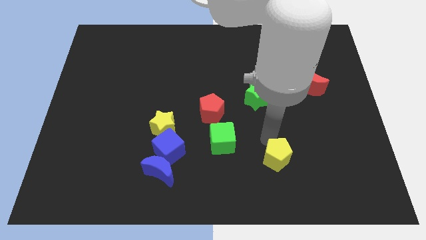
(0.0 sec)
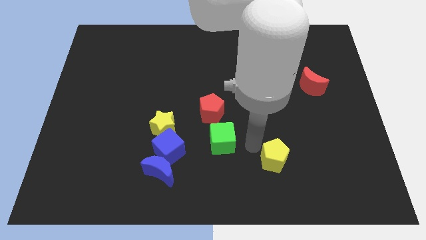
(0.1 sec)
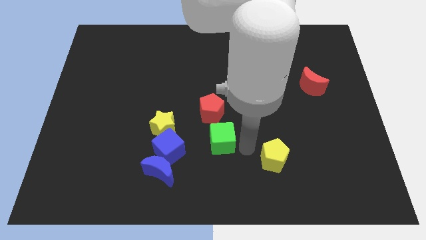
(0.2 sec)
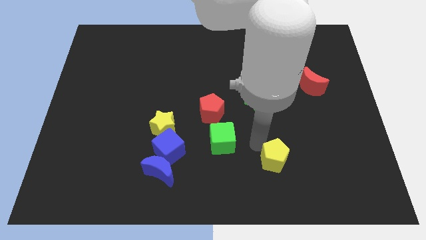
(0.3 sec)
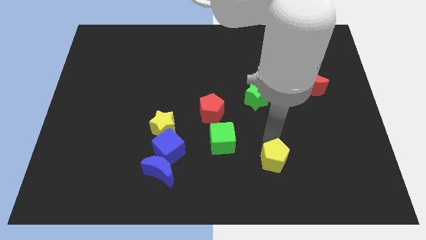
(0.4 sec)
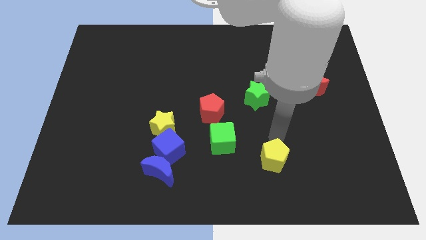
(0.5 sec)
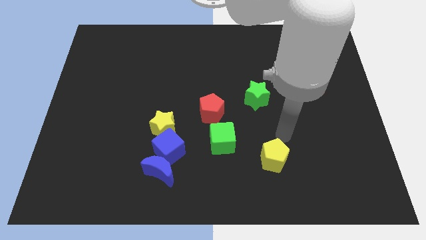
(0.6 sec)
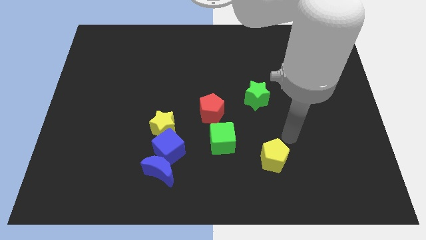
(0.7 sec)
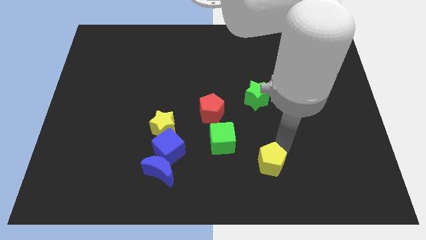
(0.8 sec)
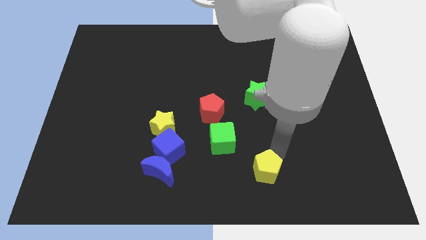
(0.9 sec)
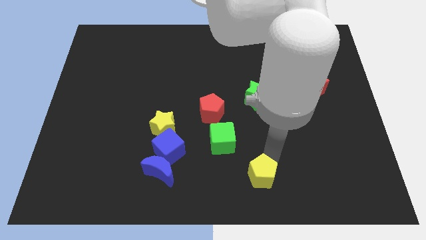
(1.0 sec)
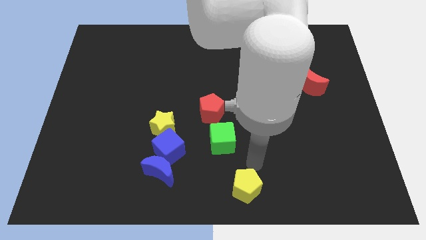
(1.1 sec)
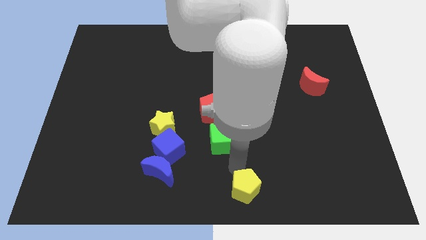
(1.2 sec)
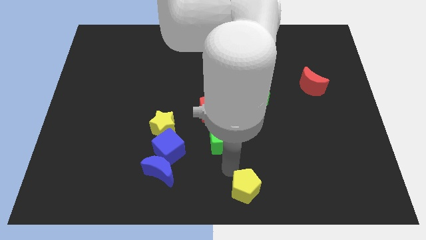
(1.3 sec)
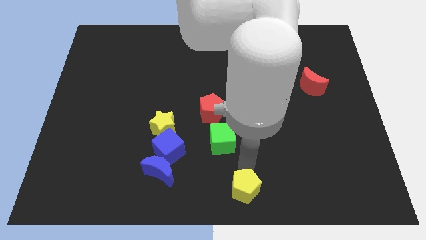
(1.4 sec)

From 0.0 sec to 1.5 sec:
push the yellow pentago to the bottom side of the green cube

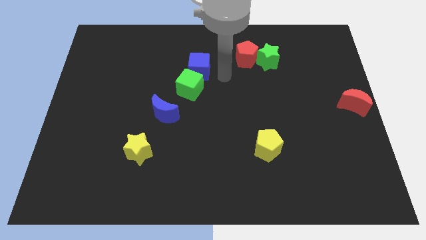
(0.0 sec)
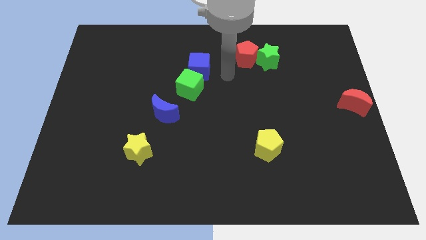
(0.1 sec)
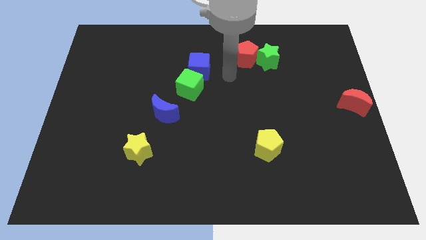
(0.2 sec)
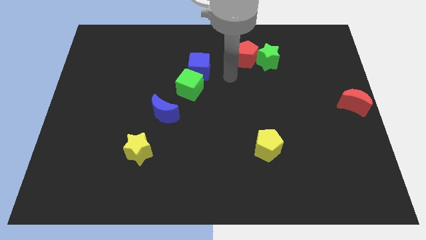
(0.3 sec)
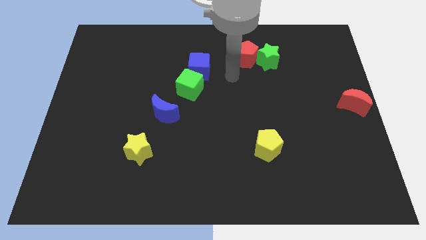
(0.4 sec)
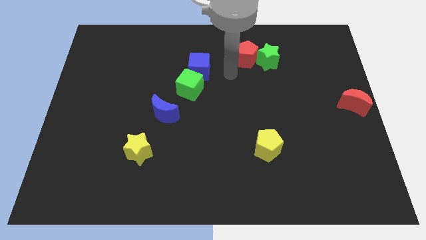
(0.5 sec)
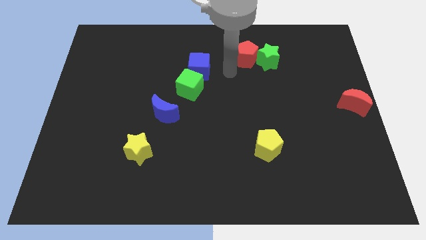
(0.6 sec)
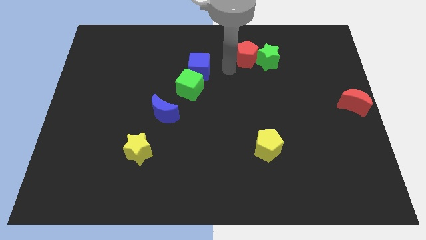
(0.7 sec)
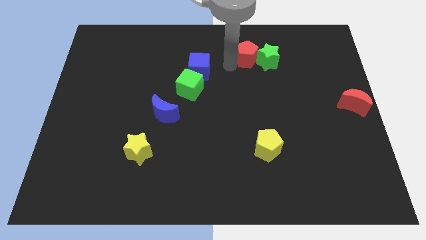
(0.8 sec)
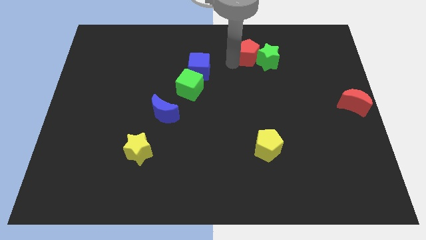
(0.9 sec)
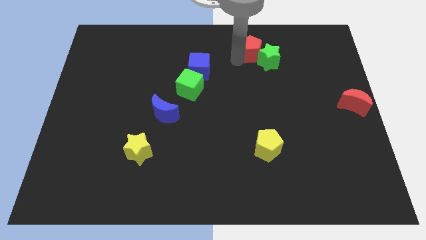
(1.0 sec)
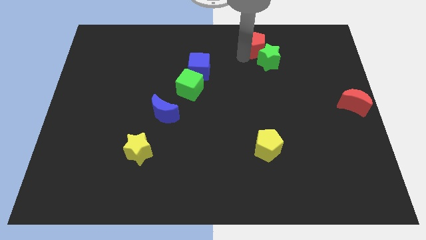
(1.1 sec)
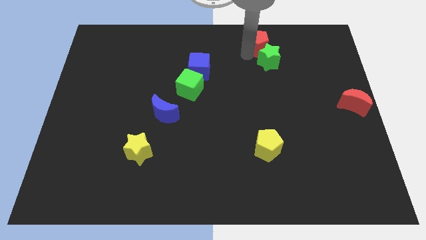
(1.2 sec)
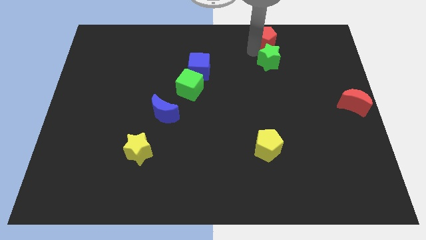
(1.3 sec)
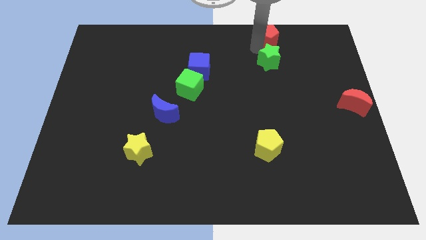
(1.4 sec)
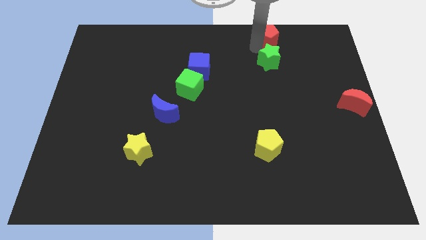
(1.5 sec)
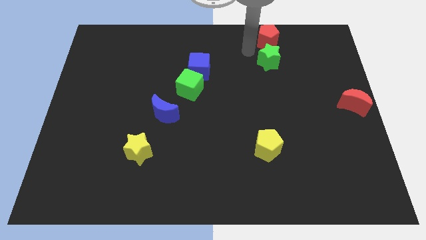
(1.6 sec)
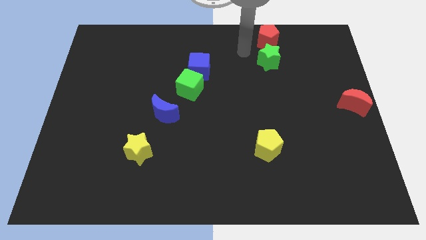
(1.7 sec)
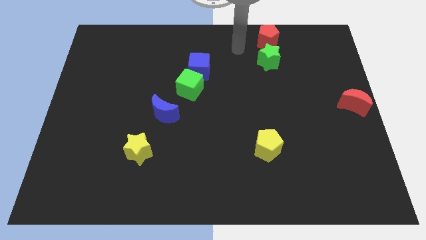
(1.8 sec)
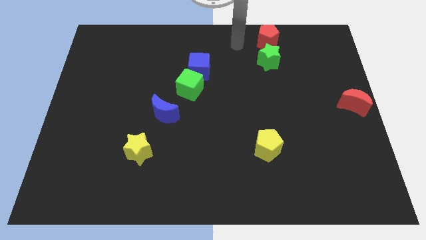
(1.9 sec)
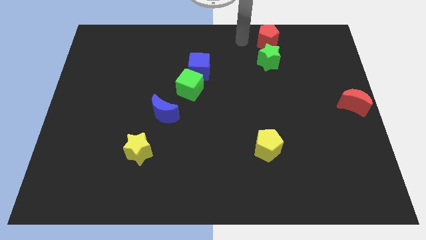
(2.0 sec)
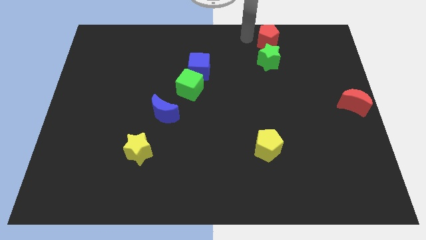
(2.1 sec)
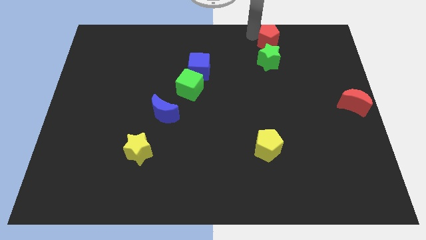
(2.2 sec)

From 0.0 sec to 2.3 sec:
move the red pentagon to the top of green star

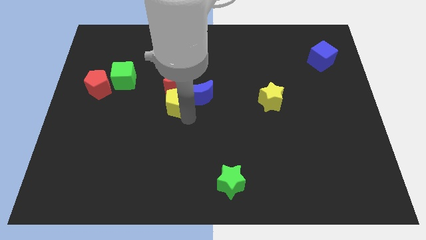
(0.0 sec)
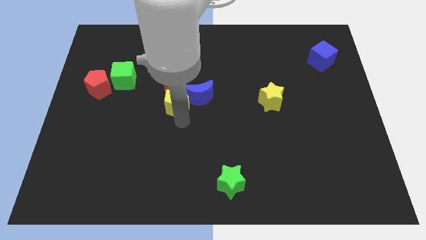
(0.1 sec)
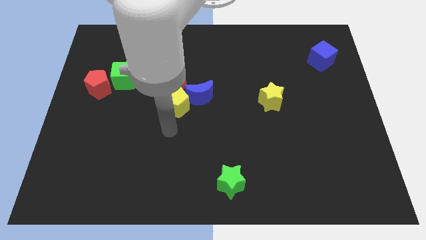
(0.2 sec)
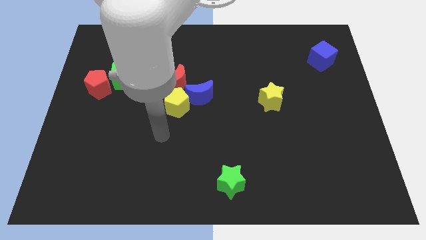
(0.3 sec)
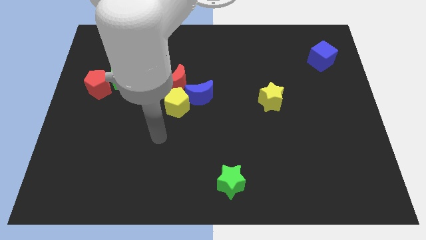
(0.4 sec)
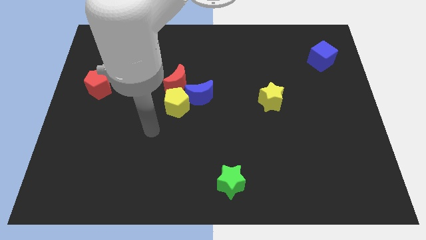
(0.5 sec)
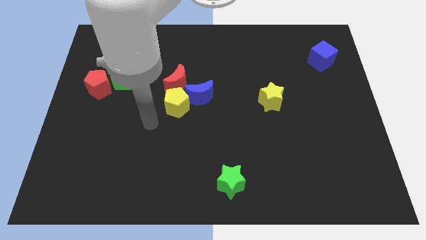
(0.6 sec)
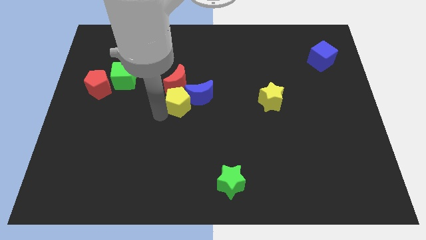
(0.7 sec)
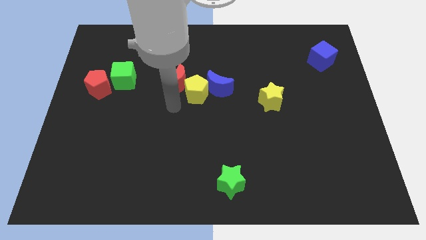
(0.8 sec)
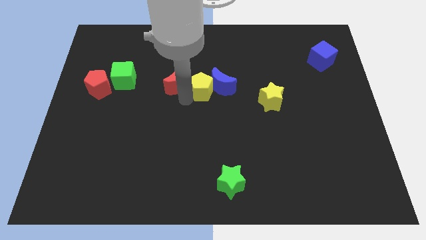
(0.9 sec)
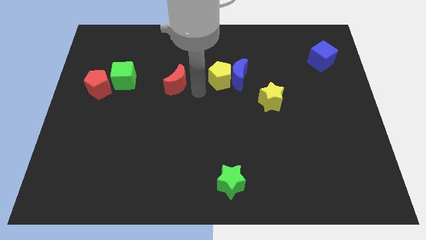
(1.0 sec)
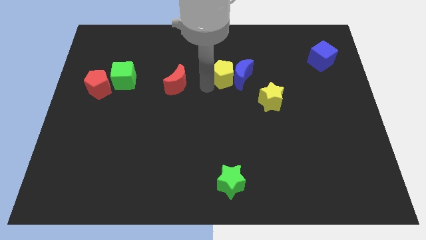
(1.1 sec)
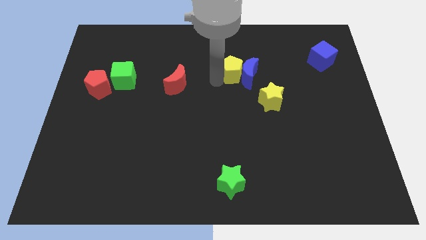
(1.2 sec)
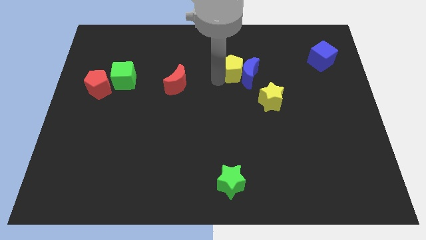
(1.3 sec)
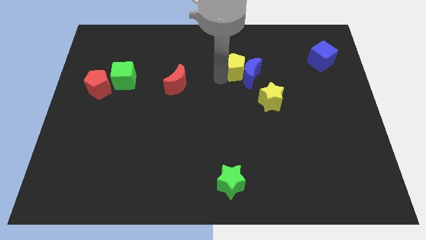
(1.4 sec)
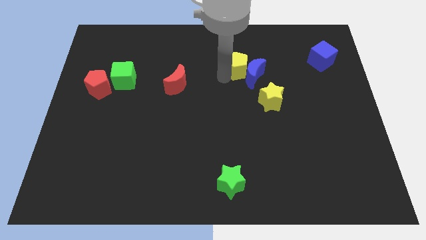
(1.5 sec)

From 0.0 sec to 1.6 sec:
move the yellow pentagon and the blue moon away from red moon

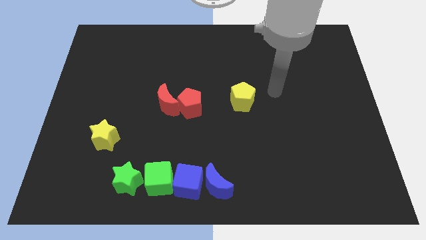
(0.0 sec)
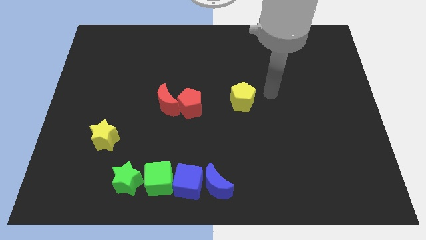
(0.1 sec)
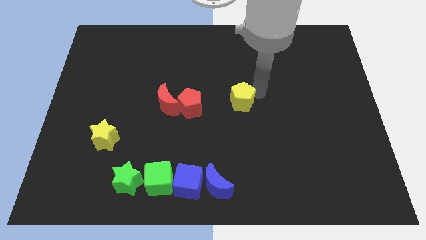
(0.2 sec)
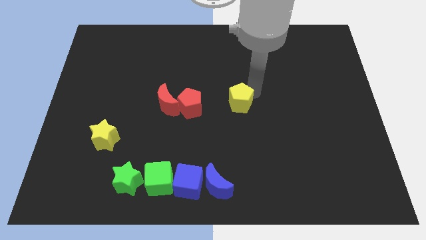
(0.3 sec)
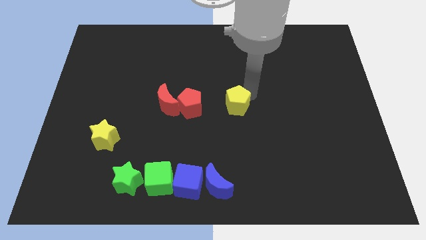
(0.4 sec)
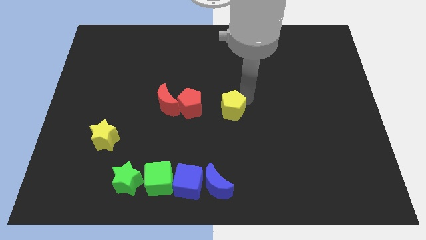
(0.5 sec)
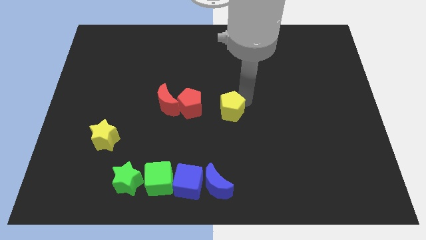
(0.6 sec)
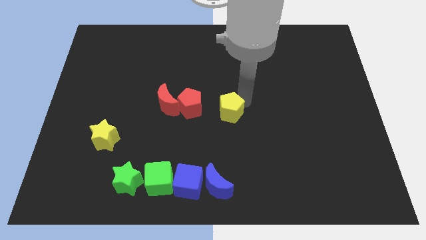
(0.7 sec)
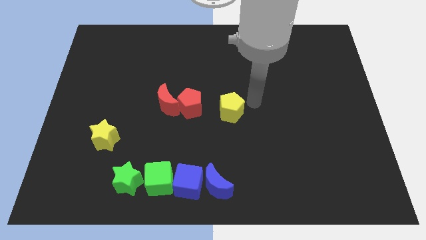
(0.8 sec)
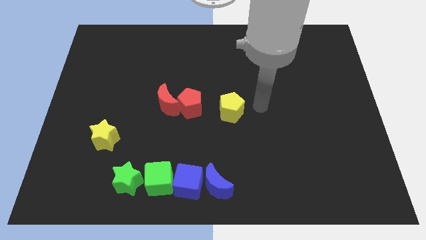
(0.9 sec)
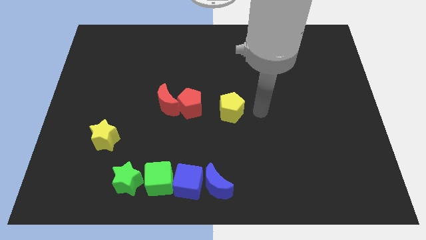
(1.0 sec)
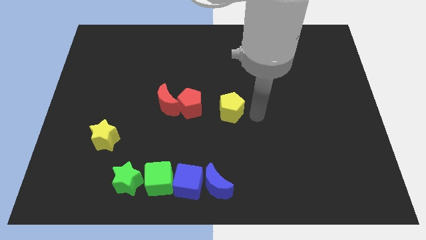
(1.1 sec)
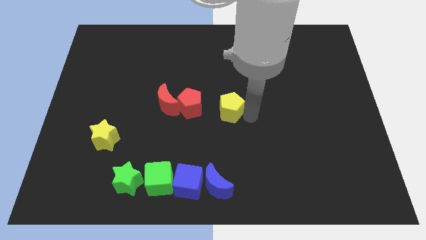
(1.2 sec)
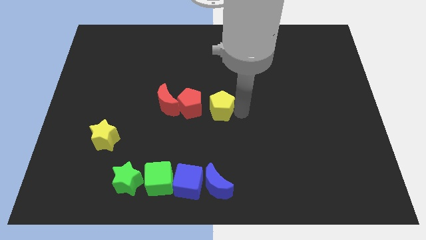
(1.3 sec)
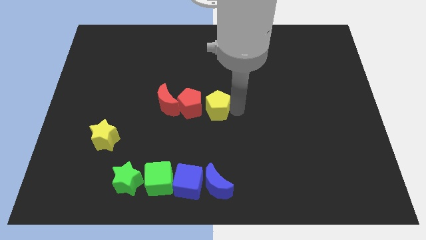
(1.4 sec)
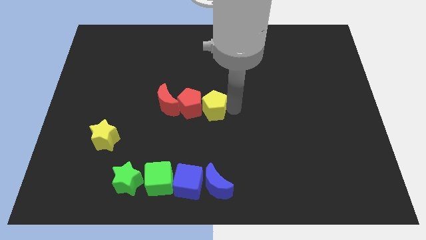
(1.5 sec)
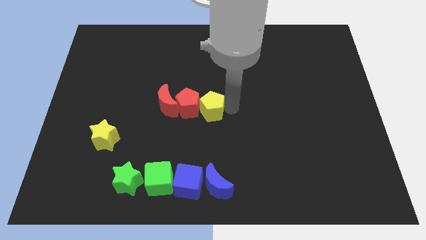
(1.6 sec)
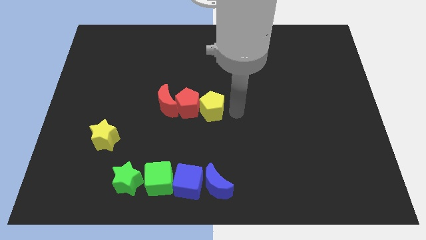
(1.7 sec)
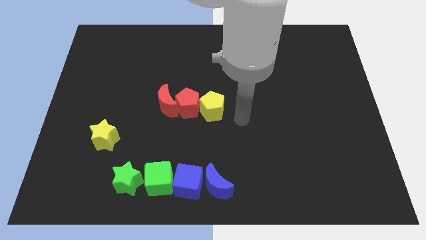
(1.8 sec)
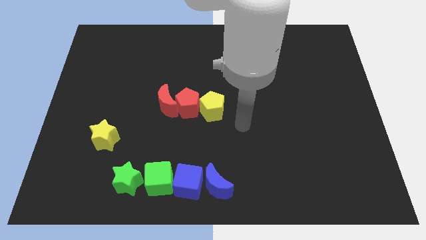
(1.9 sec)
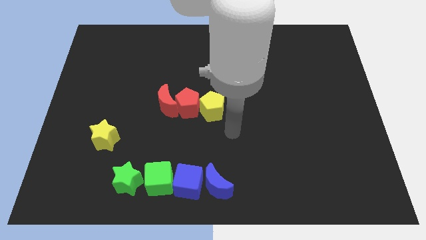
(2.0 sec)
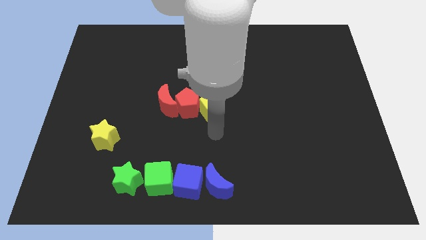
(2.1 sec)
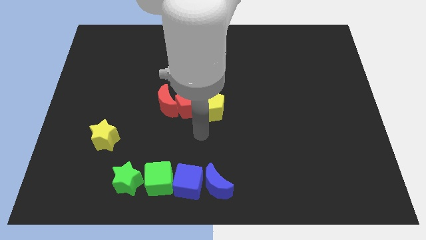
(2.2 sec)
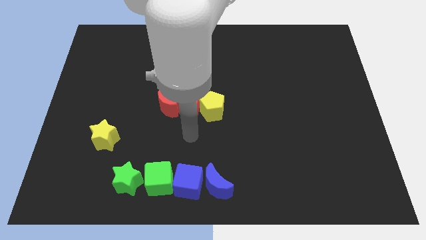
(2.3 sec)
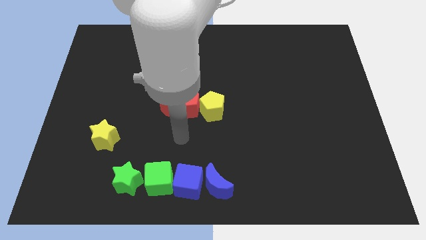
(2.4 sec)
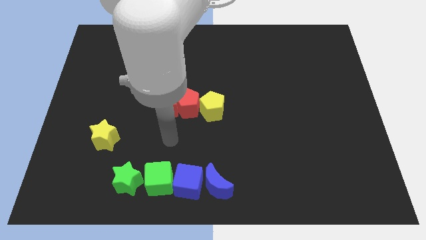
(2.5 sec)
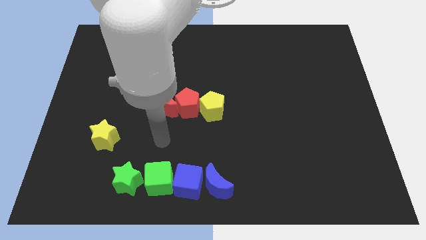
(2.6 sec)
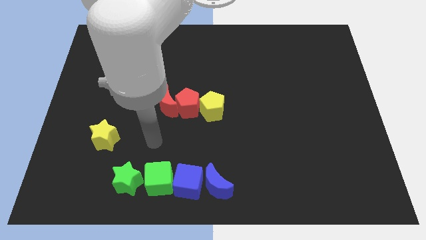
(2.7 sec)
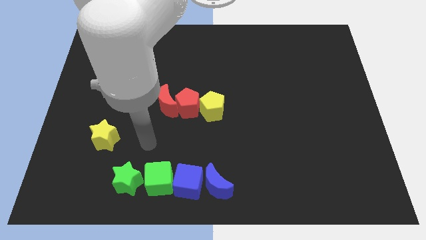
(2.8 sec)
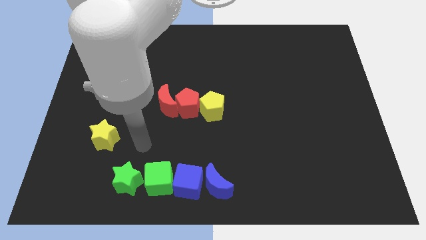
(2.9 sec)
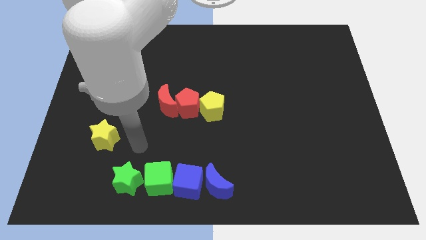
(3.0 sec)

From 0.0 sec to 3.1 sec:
slide the yellow pentagon to the right side of the red pentagon

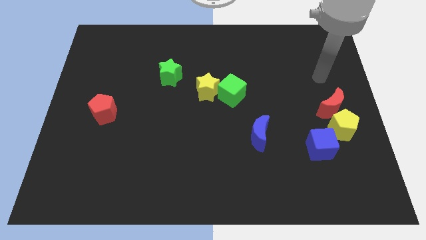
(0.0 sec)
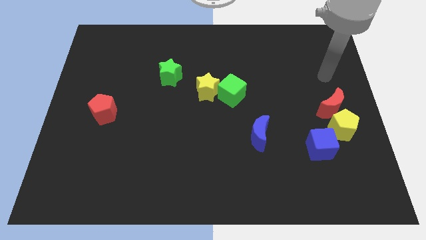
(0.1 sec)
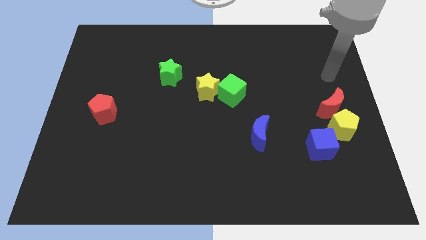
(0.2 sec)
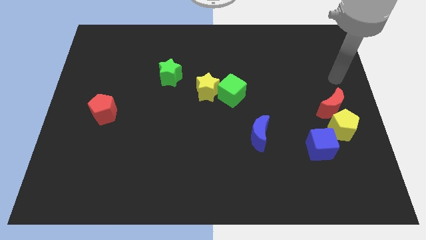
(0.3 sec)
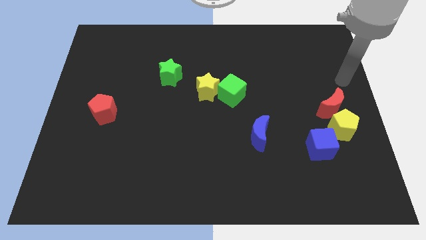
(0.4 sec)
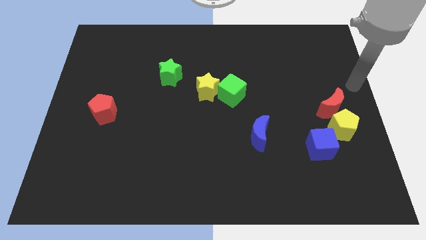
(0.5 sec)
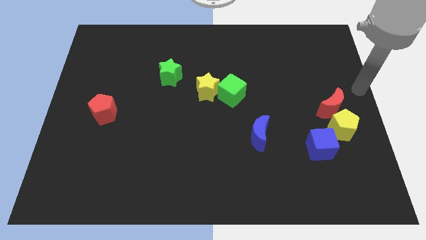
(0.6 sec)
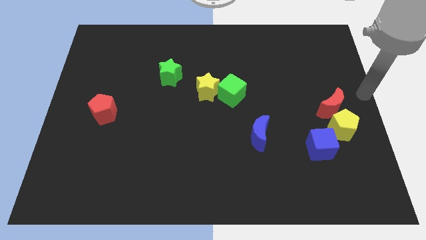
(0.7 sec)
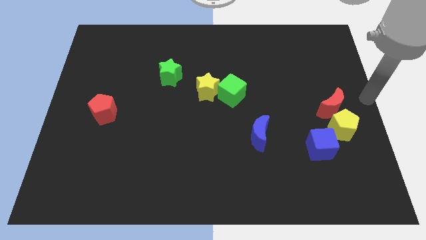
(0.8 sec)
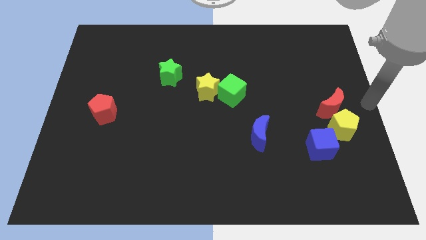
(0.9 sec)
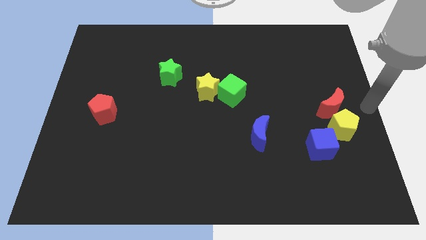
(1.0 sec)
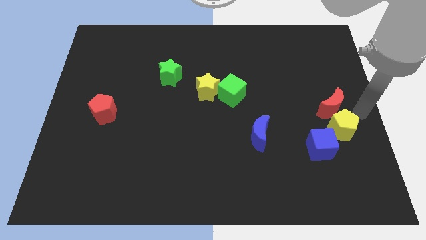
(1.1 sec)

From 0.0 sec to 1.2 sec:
move your arm towards the yellow pentagon
